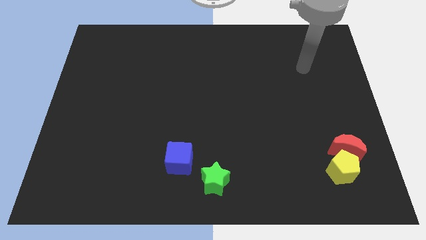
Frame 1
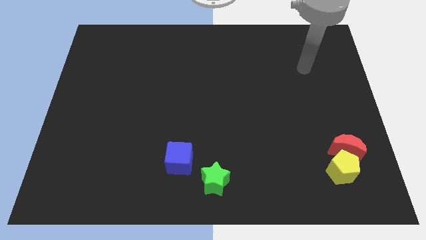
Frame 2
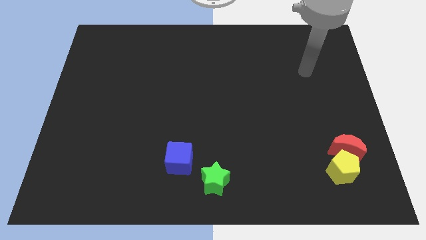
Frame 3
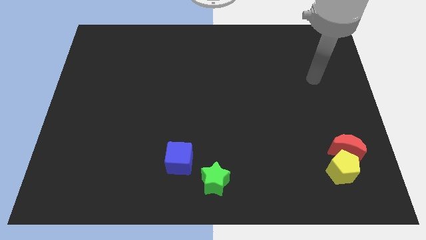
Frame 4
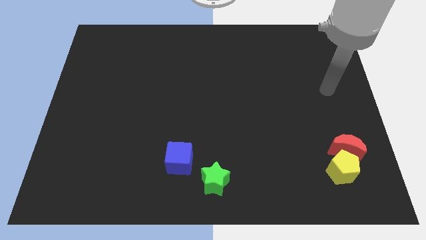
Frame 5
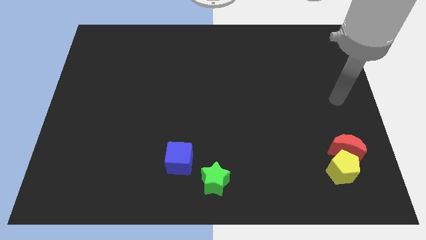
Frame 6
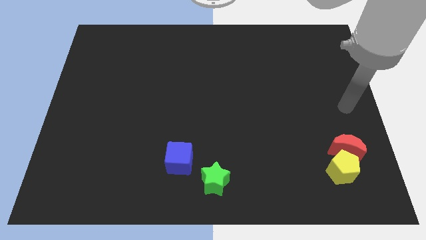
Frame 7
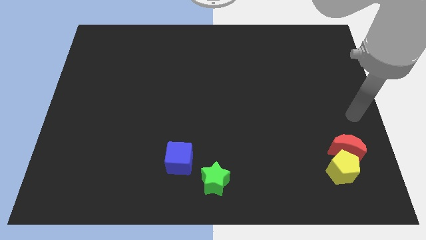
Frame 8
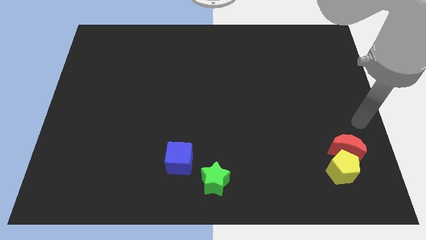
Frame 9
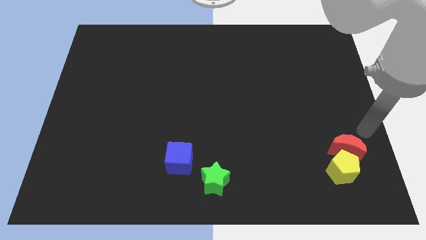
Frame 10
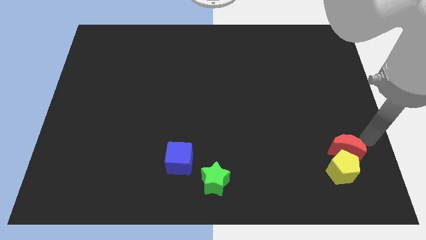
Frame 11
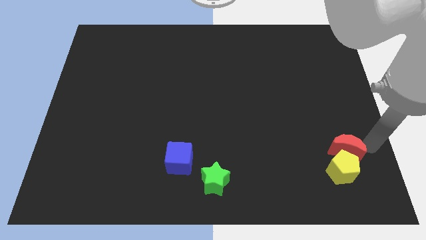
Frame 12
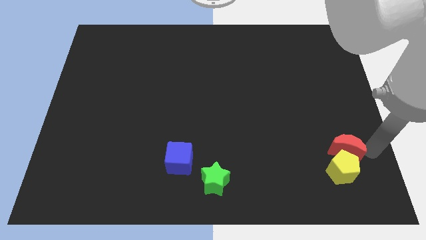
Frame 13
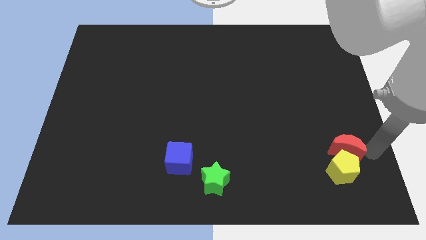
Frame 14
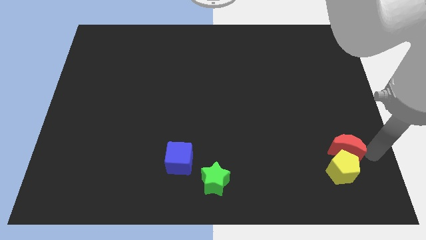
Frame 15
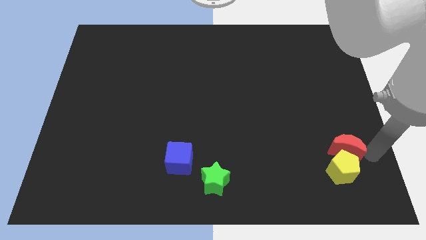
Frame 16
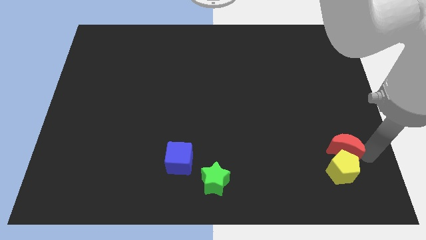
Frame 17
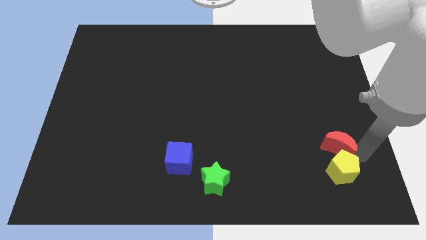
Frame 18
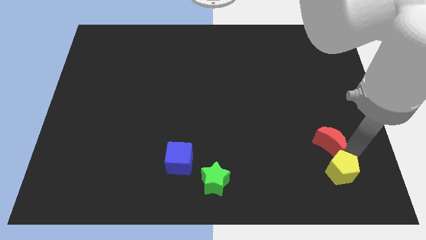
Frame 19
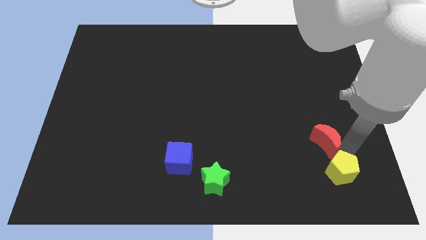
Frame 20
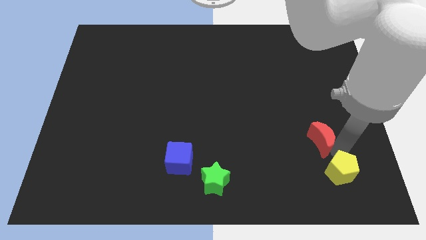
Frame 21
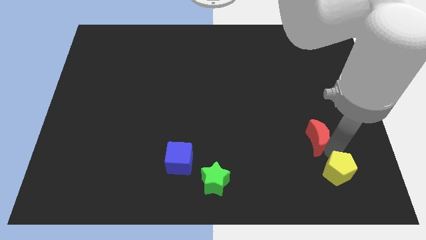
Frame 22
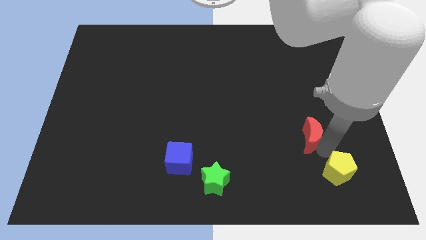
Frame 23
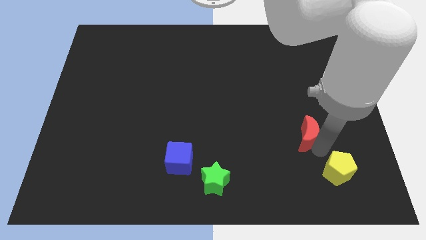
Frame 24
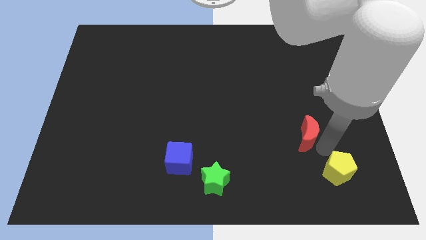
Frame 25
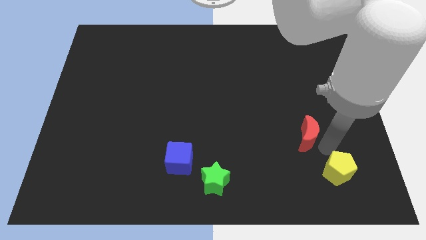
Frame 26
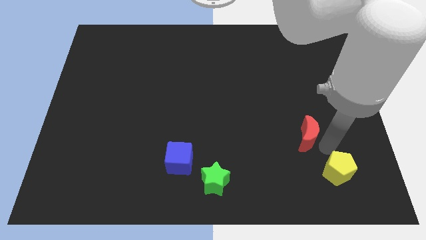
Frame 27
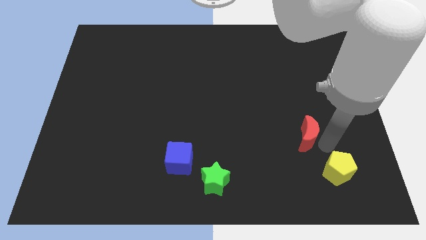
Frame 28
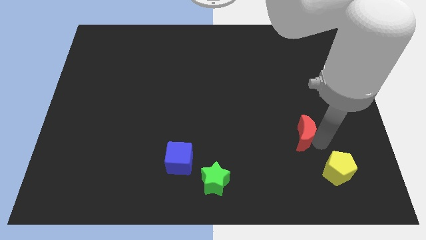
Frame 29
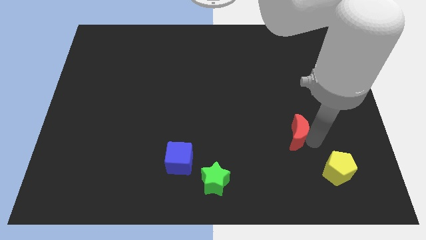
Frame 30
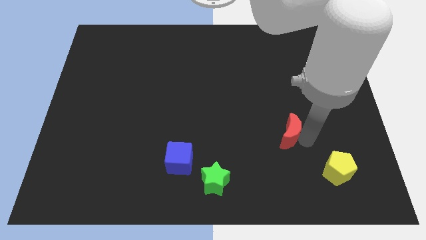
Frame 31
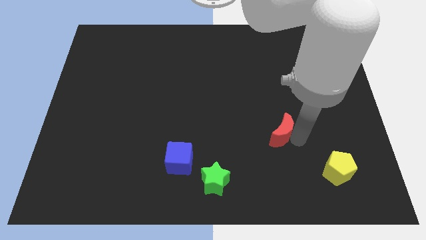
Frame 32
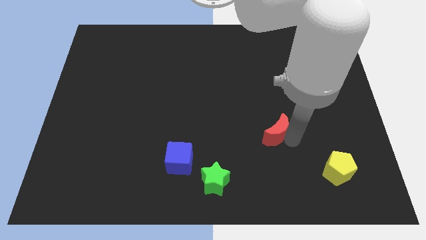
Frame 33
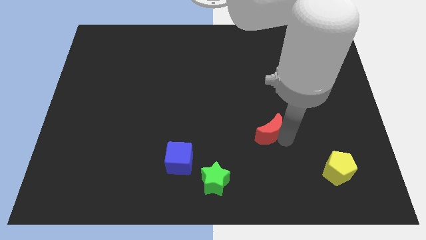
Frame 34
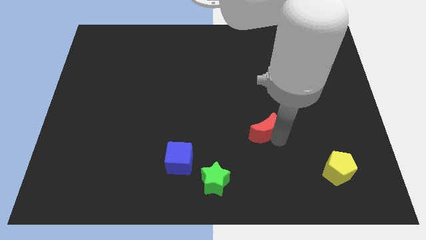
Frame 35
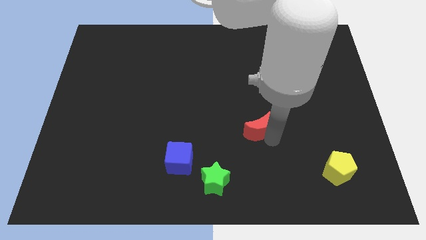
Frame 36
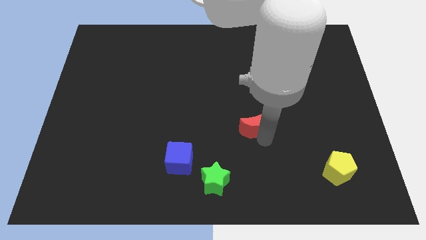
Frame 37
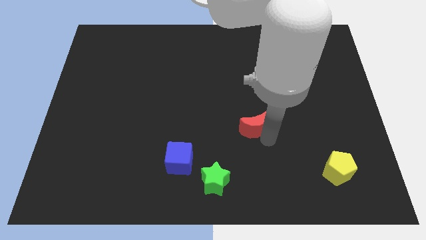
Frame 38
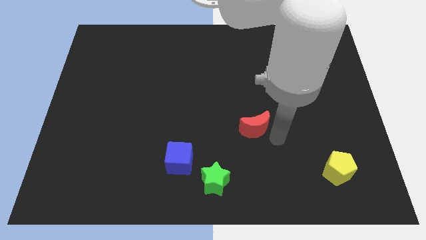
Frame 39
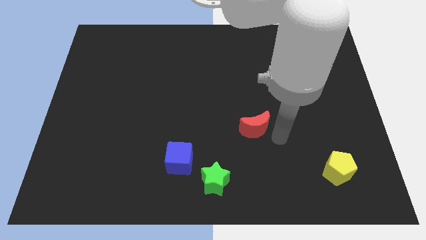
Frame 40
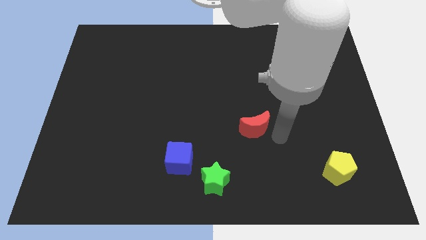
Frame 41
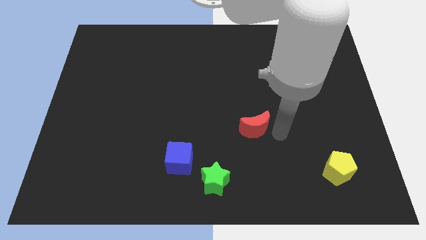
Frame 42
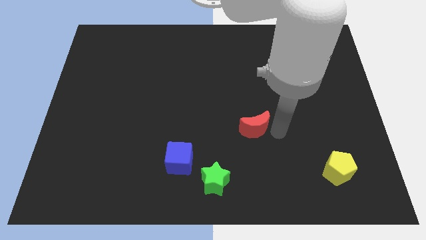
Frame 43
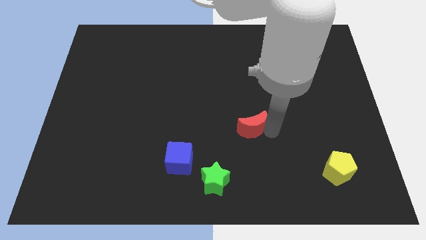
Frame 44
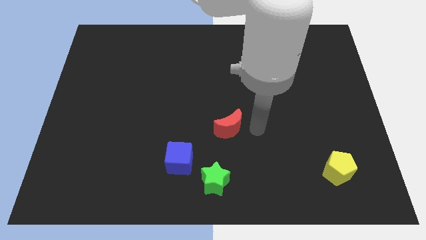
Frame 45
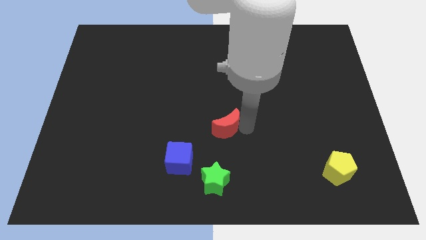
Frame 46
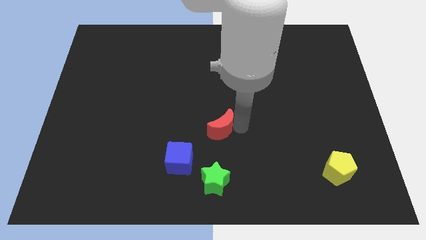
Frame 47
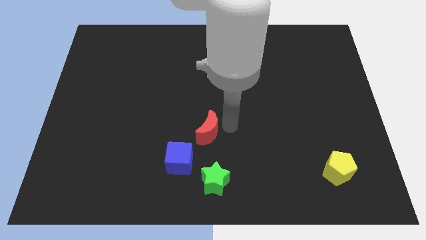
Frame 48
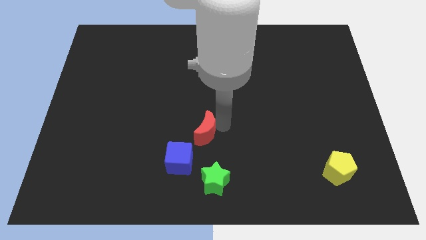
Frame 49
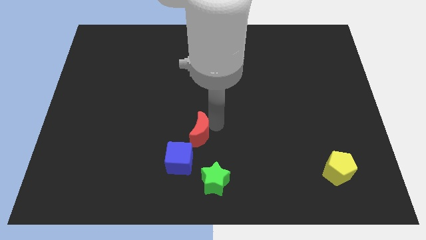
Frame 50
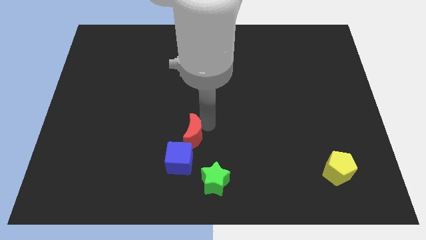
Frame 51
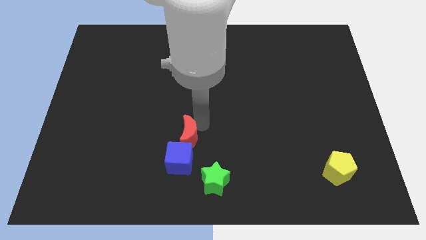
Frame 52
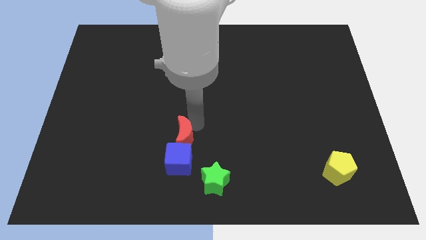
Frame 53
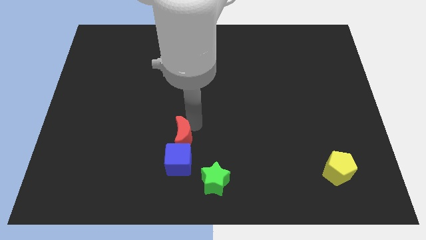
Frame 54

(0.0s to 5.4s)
move the red block to the cube

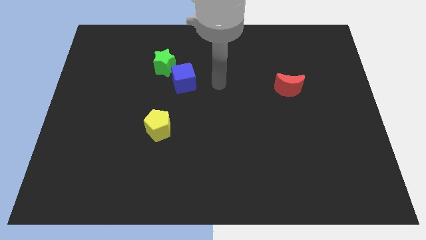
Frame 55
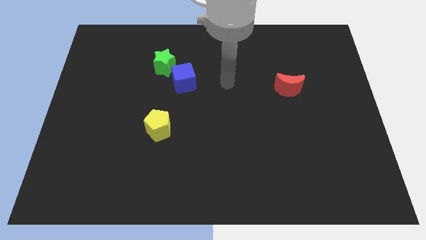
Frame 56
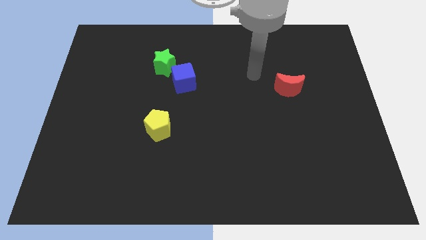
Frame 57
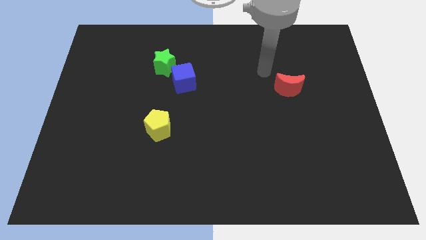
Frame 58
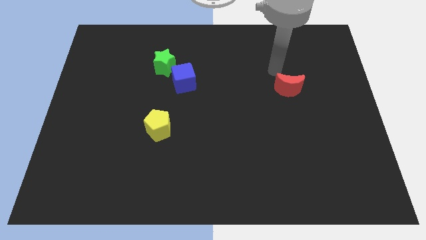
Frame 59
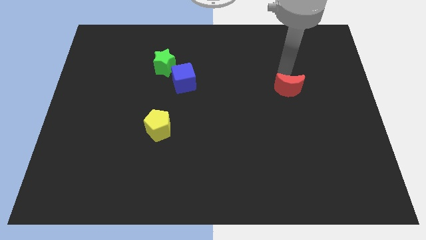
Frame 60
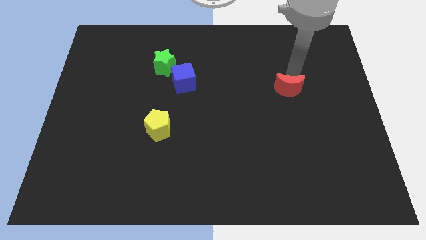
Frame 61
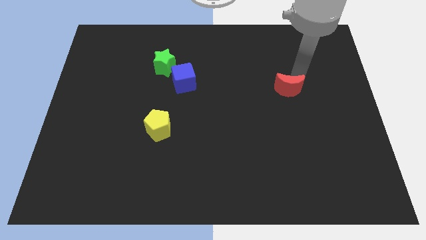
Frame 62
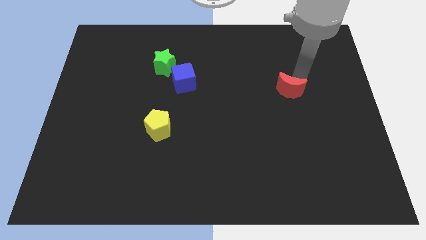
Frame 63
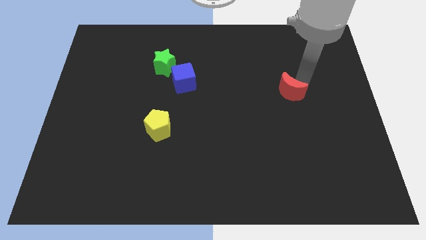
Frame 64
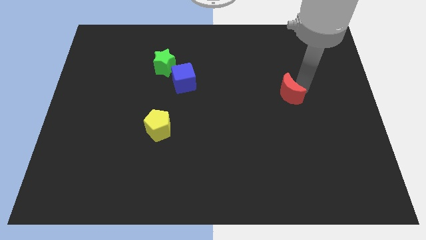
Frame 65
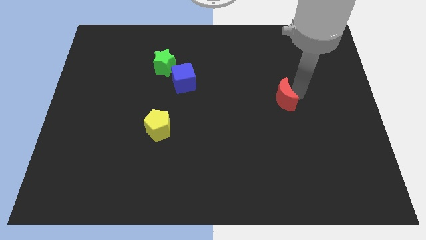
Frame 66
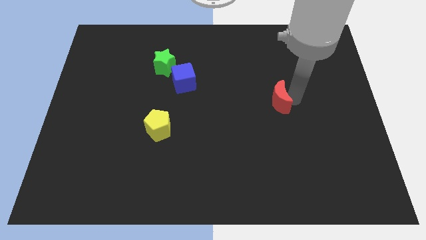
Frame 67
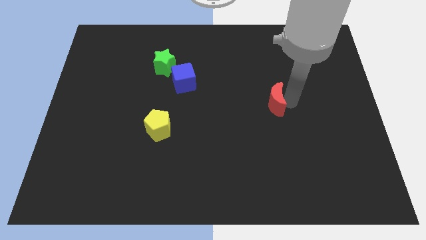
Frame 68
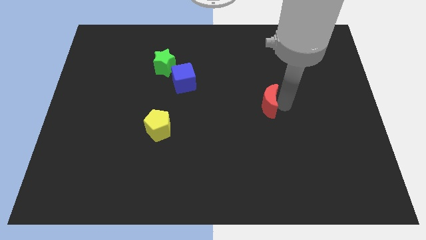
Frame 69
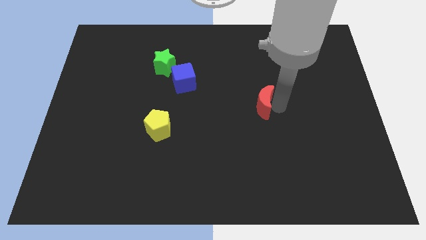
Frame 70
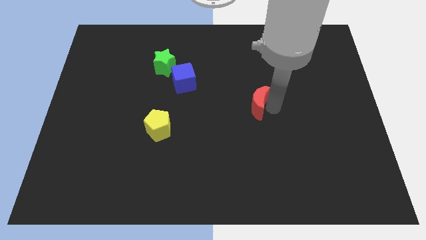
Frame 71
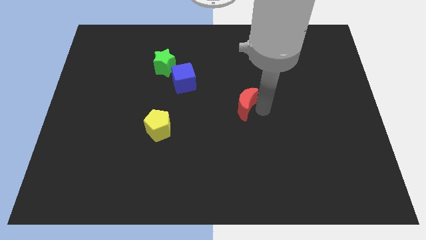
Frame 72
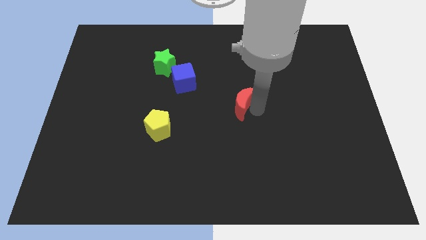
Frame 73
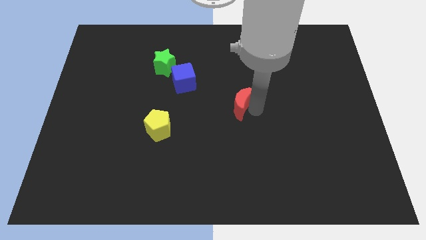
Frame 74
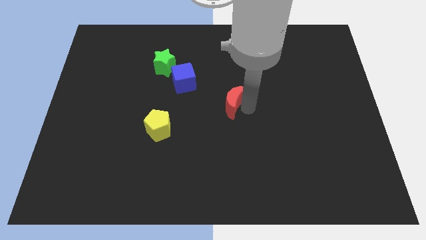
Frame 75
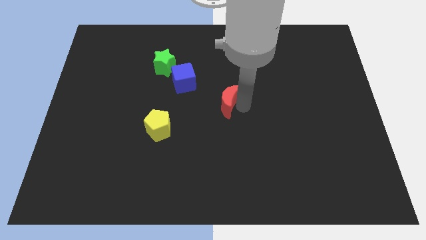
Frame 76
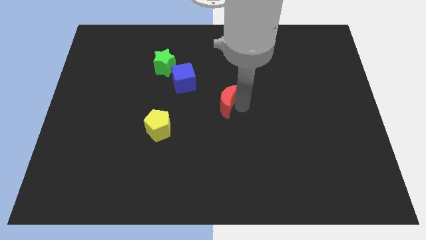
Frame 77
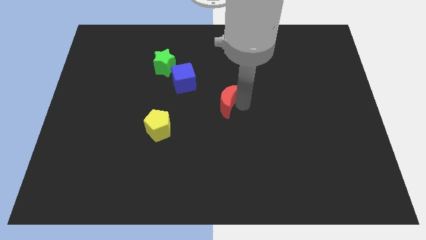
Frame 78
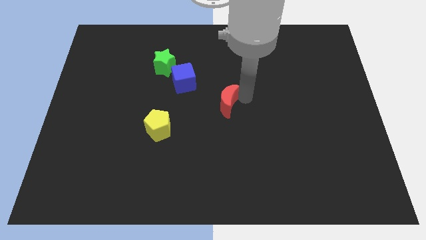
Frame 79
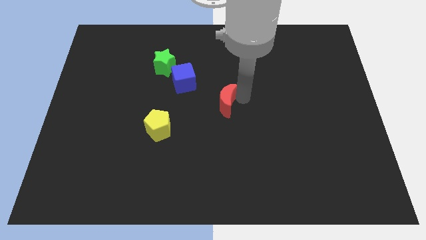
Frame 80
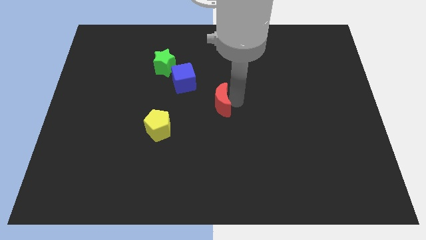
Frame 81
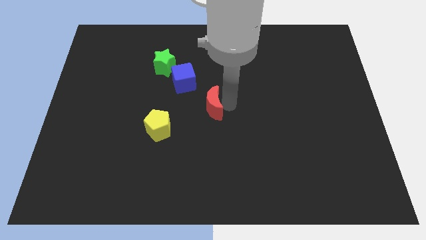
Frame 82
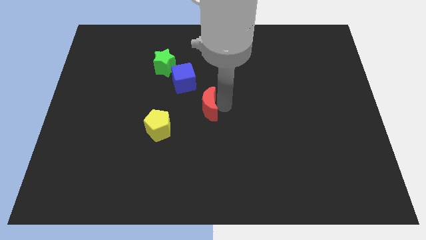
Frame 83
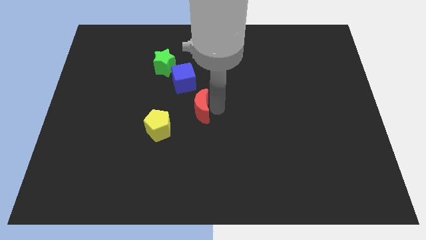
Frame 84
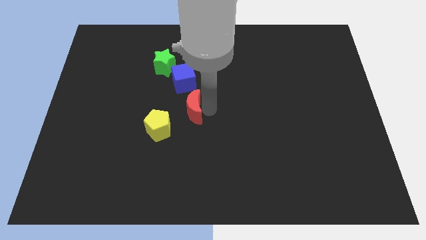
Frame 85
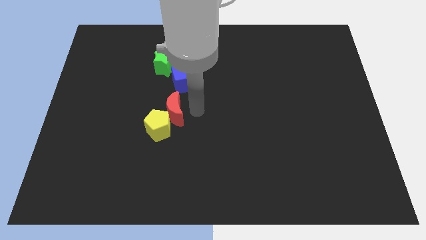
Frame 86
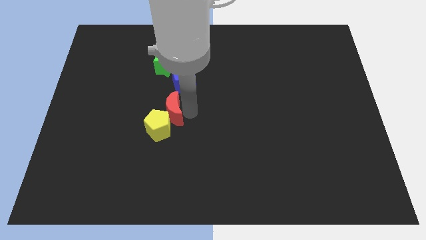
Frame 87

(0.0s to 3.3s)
push the moon close to the yellow pentagon

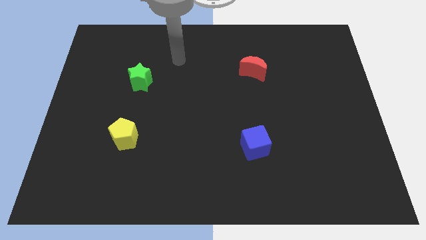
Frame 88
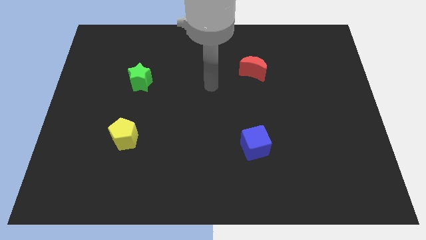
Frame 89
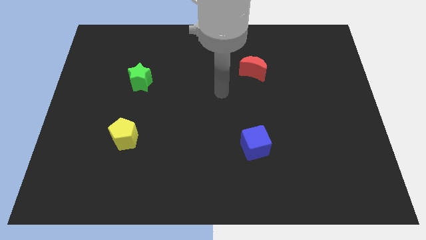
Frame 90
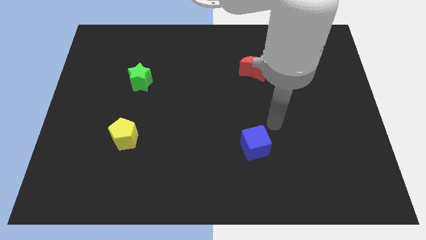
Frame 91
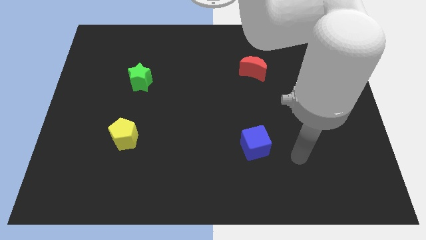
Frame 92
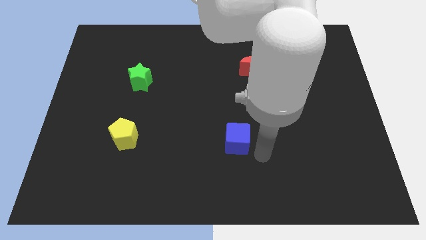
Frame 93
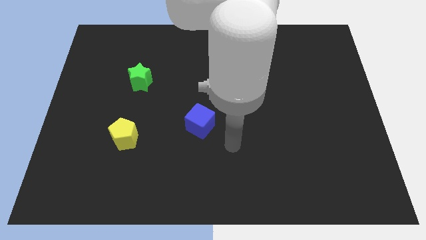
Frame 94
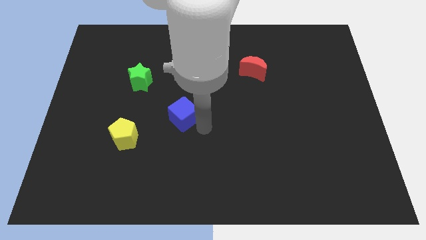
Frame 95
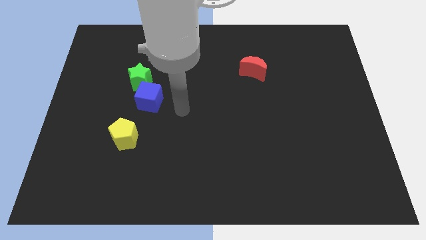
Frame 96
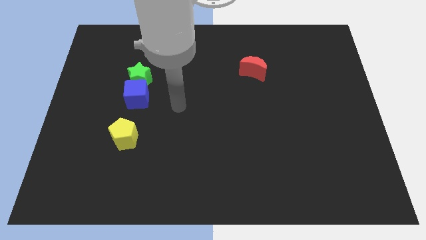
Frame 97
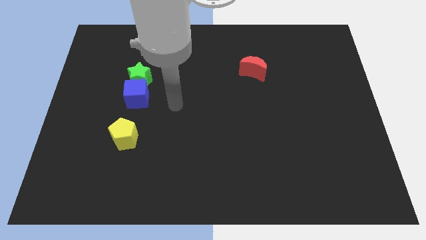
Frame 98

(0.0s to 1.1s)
slide the cube next to the green block
